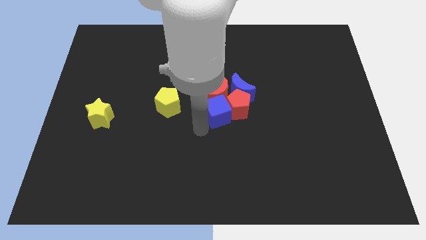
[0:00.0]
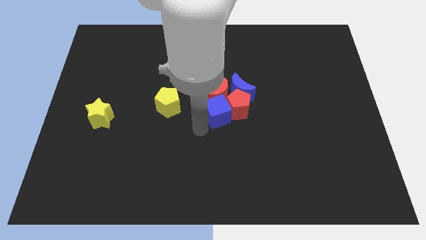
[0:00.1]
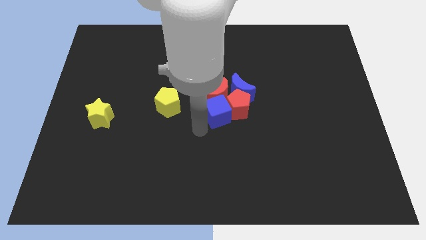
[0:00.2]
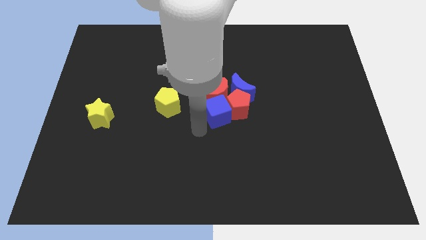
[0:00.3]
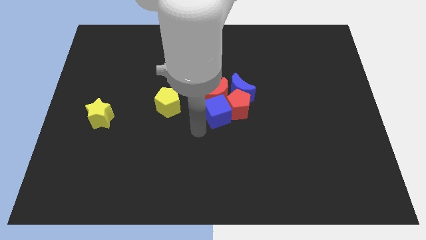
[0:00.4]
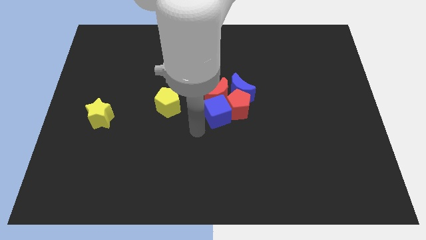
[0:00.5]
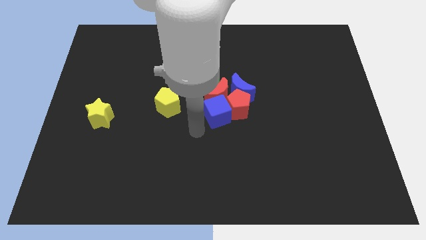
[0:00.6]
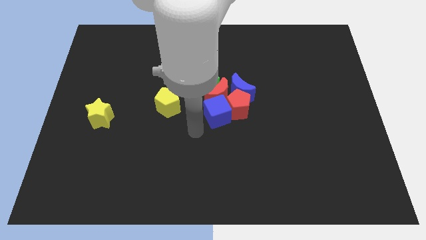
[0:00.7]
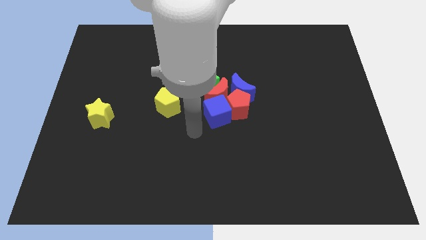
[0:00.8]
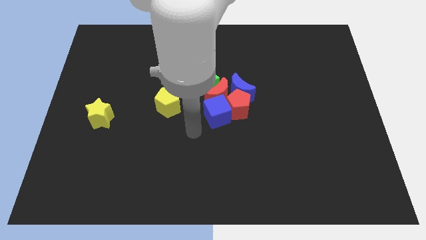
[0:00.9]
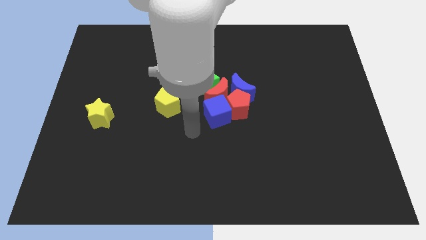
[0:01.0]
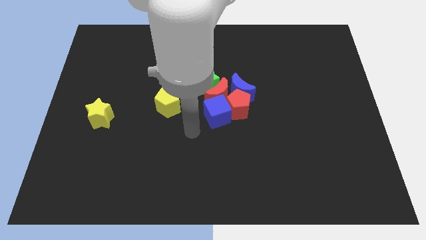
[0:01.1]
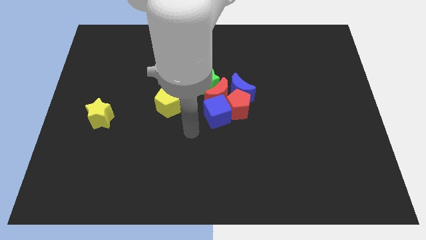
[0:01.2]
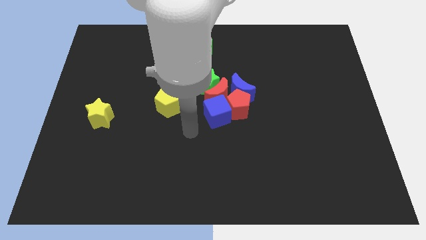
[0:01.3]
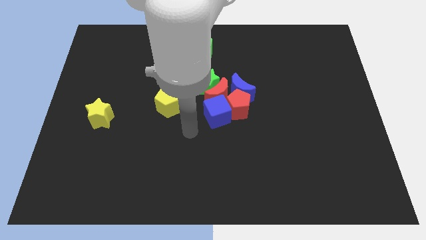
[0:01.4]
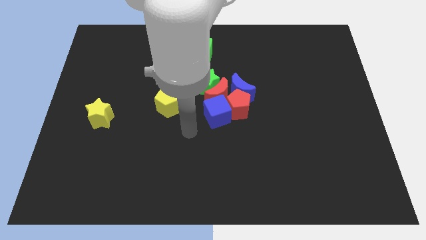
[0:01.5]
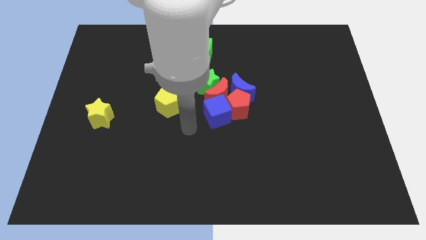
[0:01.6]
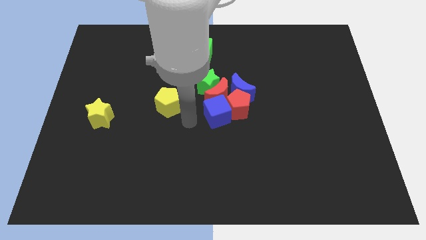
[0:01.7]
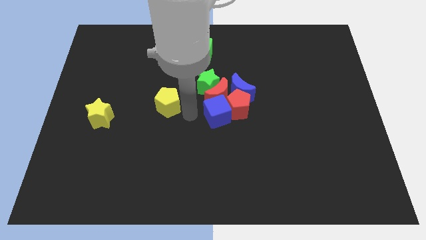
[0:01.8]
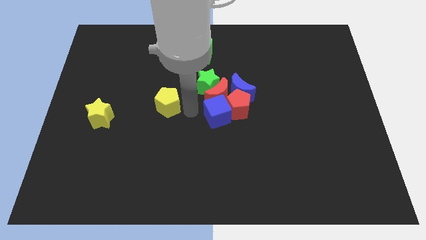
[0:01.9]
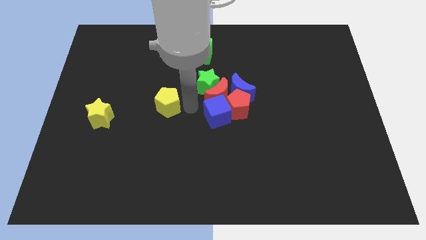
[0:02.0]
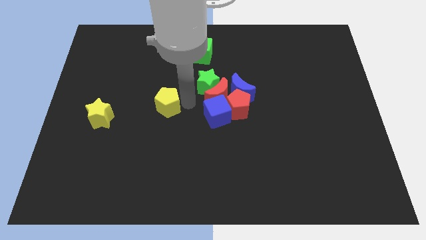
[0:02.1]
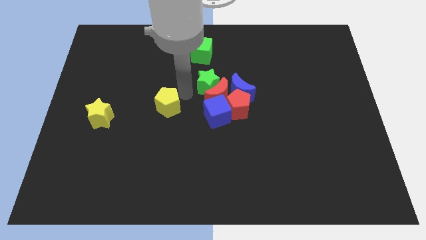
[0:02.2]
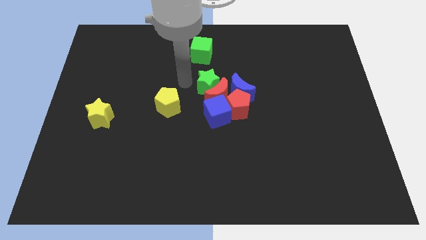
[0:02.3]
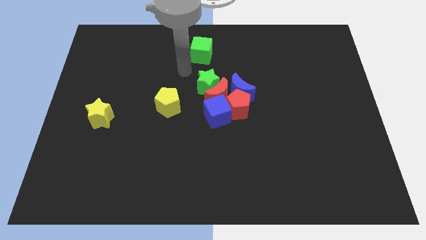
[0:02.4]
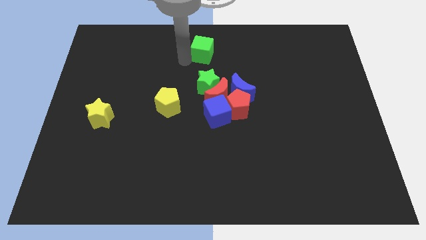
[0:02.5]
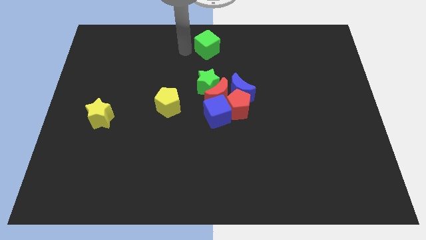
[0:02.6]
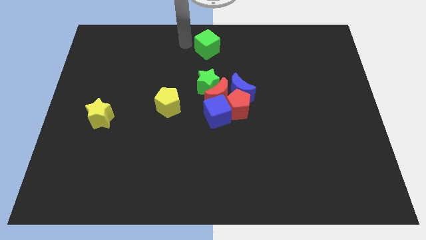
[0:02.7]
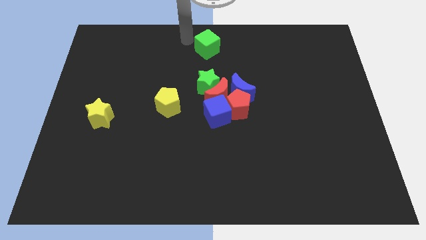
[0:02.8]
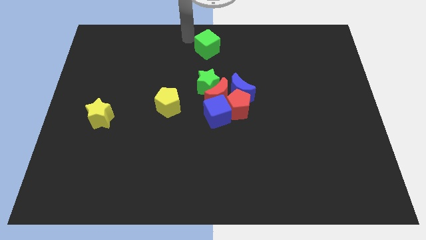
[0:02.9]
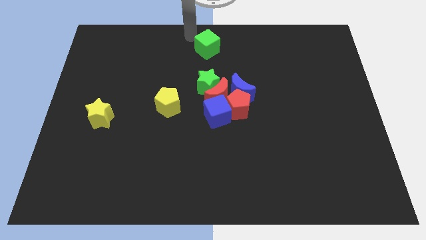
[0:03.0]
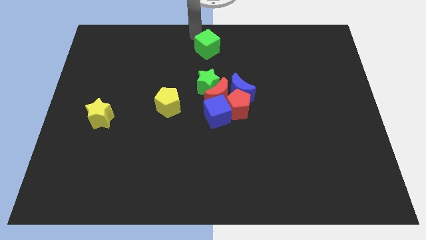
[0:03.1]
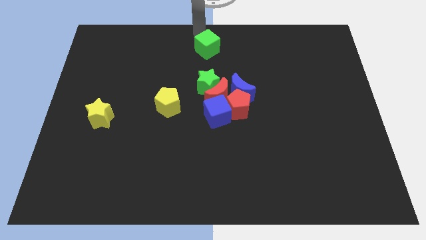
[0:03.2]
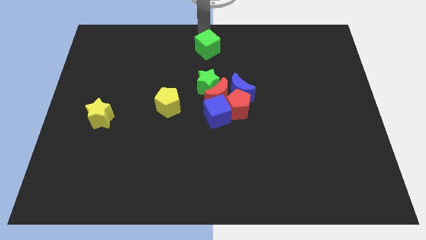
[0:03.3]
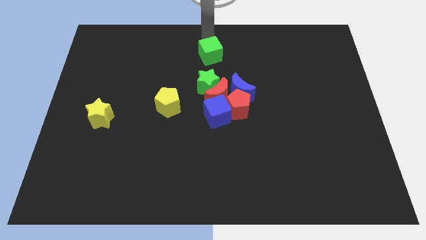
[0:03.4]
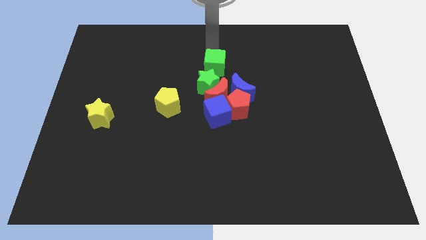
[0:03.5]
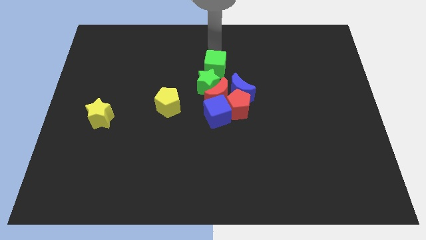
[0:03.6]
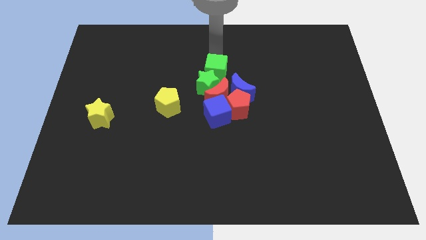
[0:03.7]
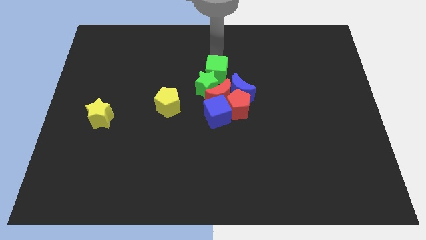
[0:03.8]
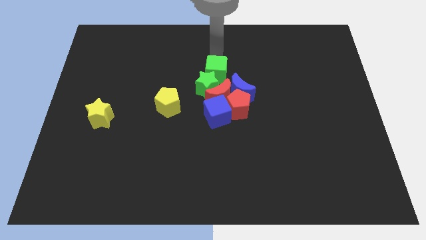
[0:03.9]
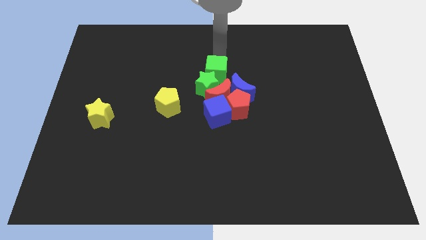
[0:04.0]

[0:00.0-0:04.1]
slide the green cube into the green star

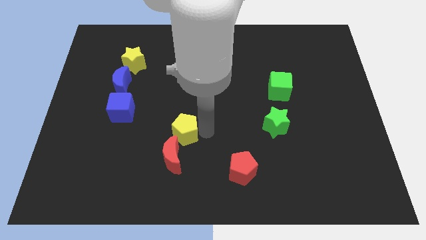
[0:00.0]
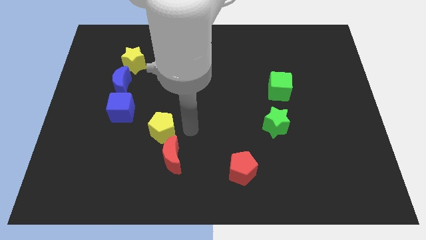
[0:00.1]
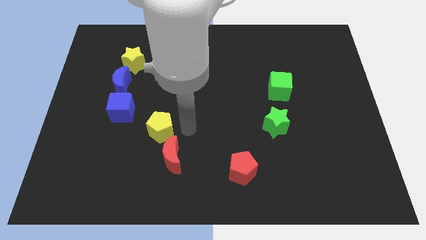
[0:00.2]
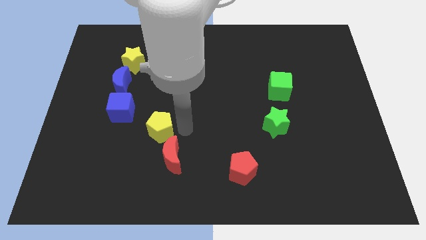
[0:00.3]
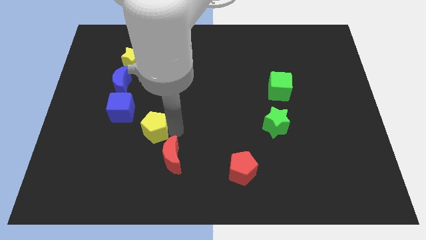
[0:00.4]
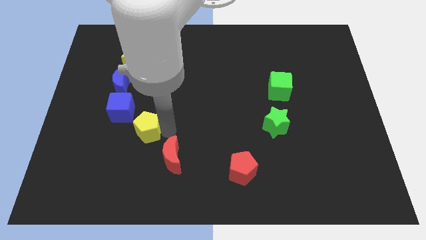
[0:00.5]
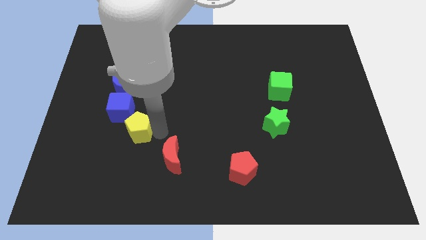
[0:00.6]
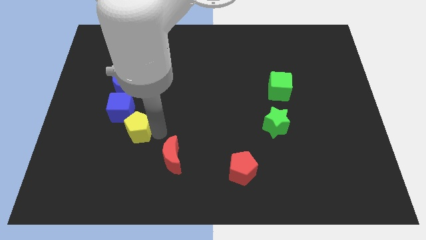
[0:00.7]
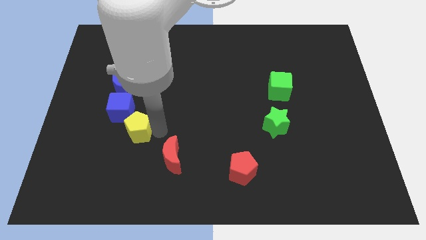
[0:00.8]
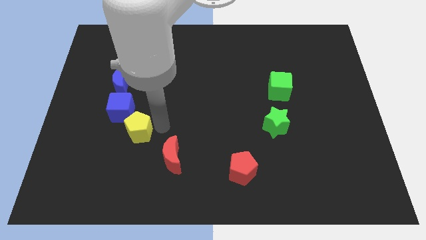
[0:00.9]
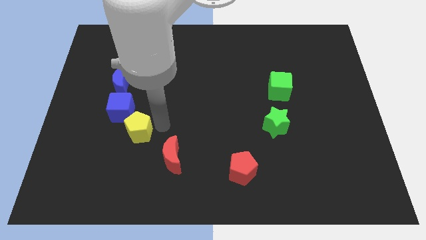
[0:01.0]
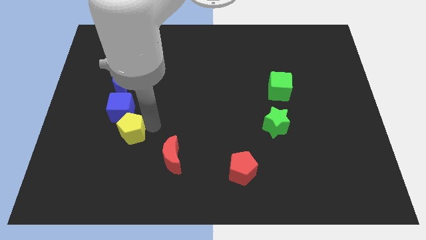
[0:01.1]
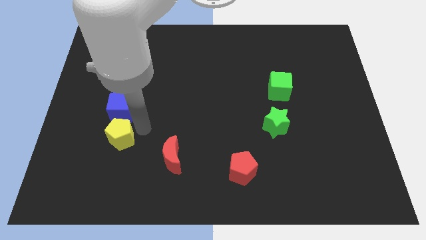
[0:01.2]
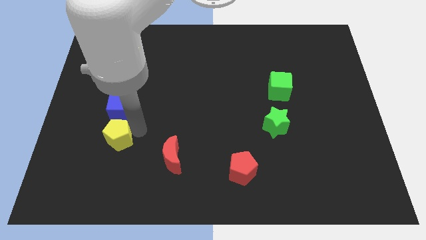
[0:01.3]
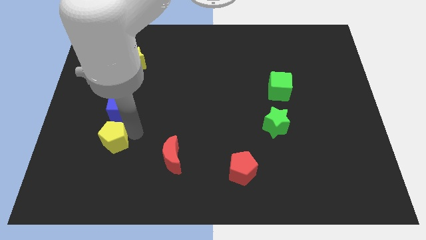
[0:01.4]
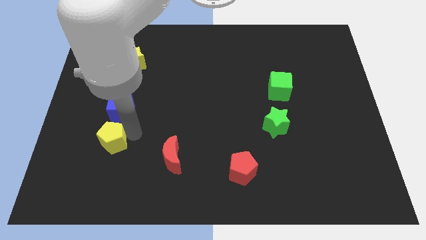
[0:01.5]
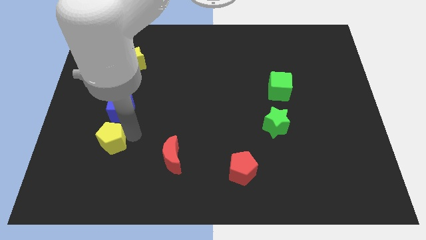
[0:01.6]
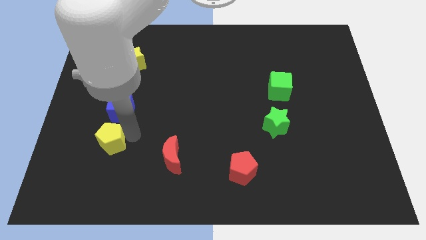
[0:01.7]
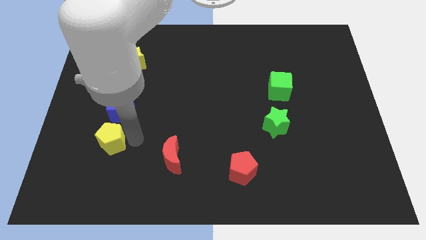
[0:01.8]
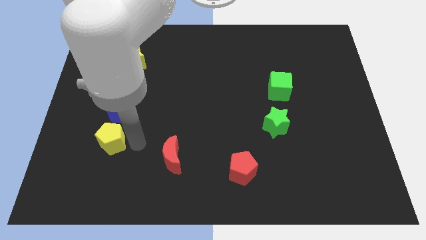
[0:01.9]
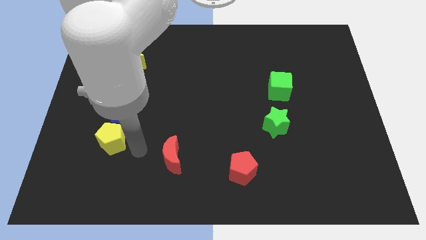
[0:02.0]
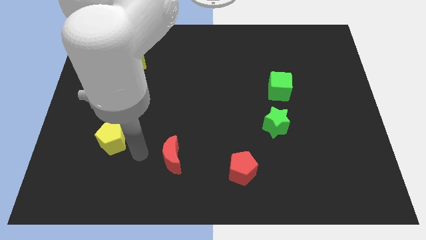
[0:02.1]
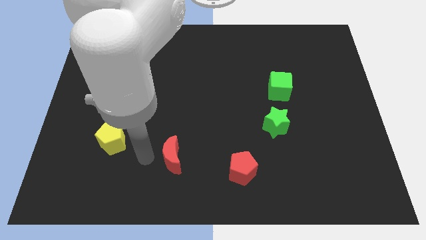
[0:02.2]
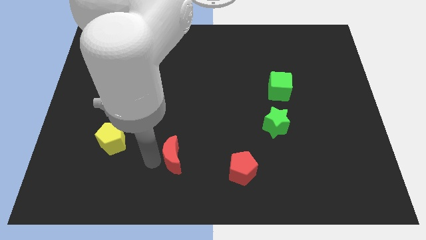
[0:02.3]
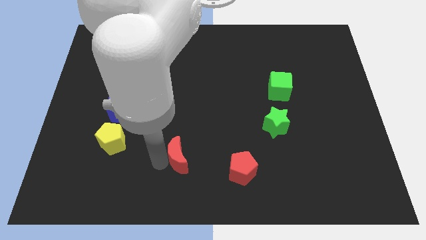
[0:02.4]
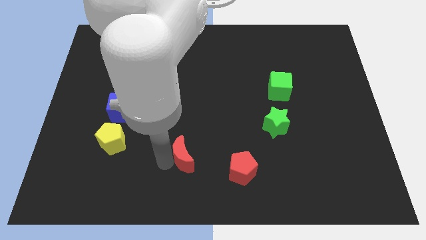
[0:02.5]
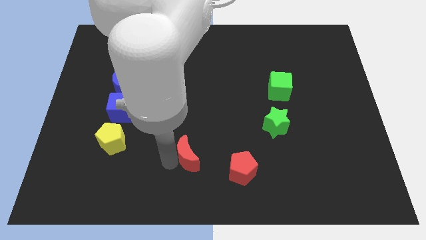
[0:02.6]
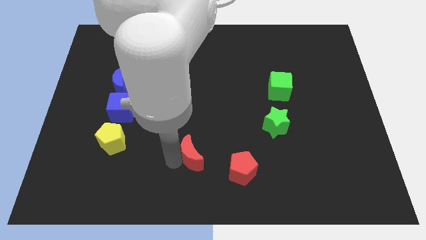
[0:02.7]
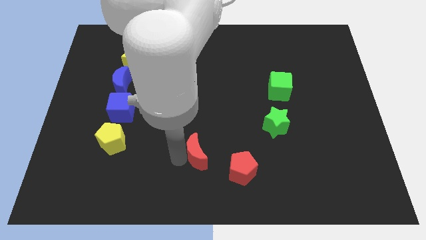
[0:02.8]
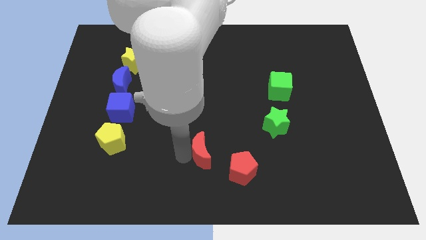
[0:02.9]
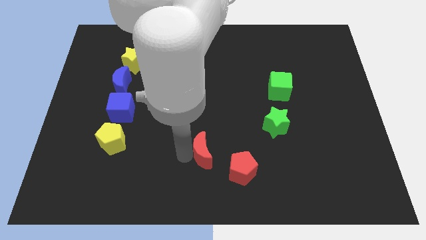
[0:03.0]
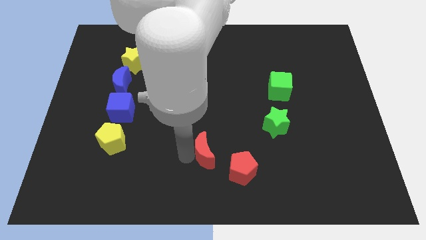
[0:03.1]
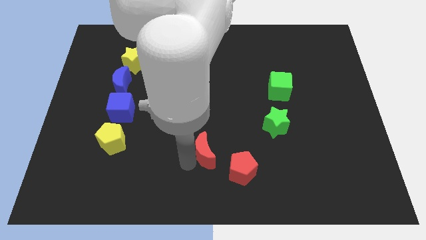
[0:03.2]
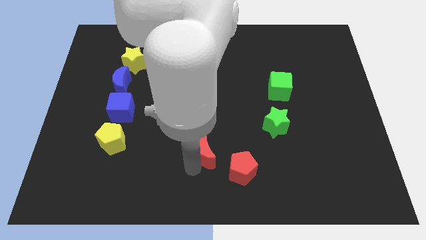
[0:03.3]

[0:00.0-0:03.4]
move red moon towards red pentagon

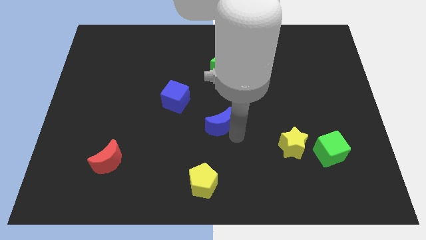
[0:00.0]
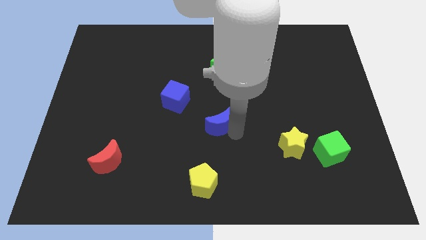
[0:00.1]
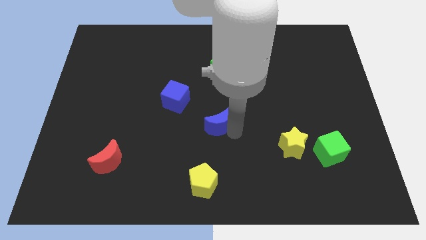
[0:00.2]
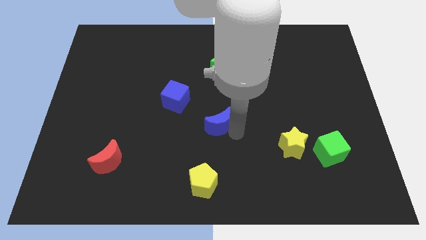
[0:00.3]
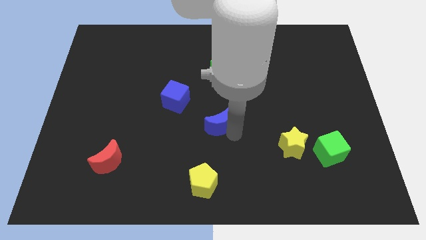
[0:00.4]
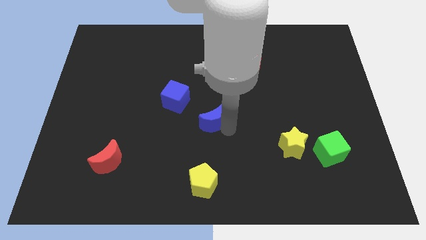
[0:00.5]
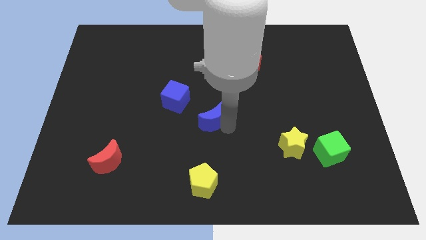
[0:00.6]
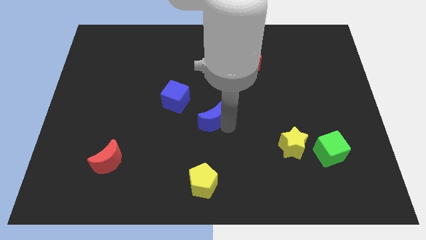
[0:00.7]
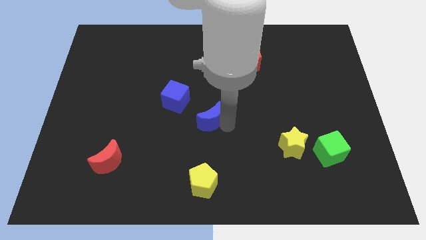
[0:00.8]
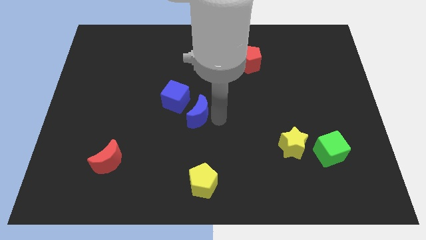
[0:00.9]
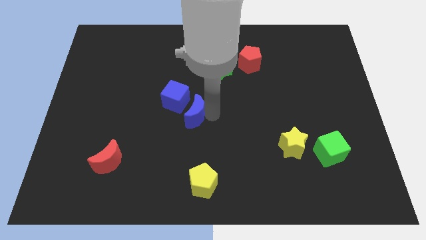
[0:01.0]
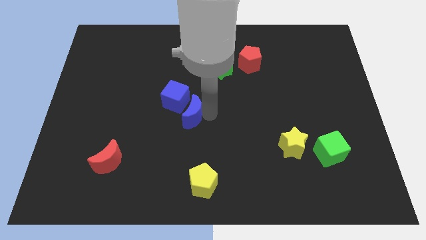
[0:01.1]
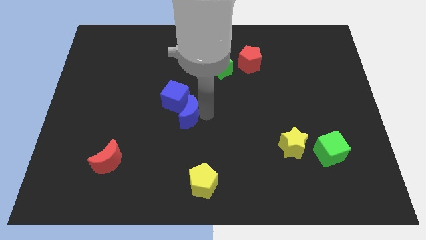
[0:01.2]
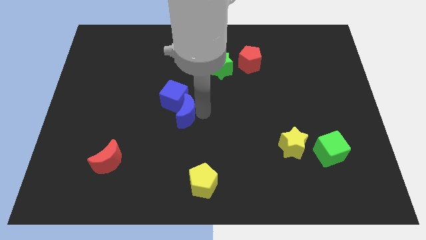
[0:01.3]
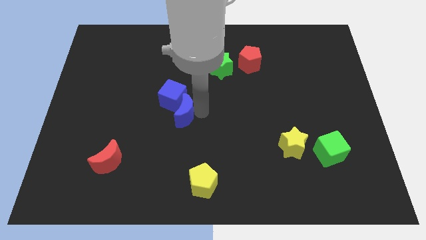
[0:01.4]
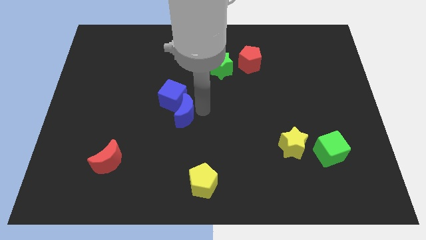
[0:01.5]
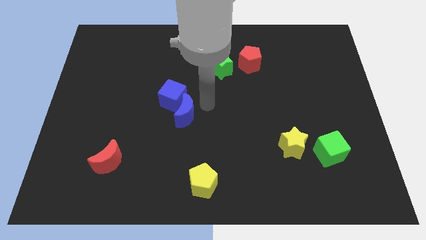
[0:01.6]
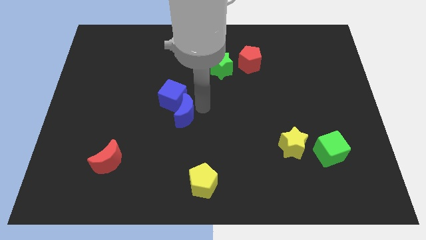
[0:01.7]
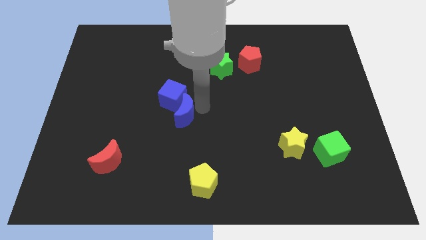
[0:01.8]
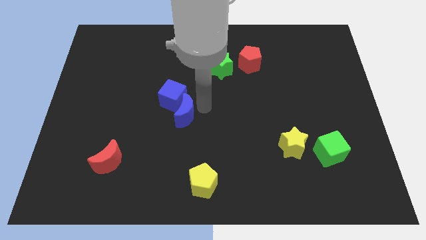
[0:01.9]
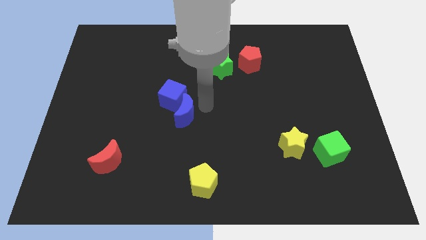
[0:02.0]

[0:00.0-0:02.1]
push the blue moon into blue cube
